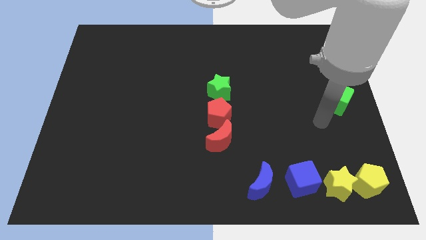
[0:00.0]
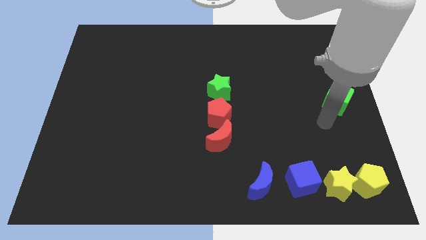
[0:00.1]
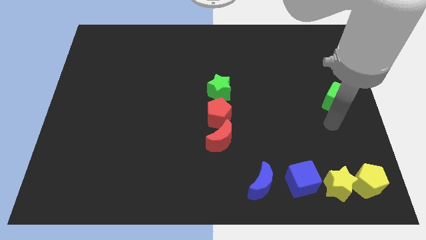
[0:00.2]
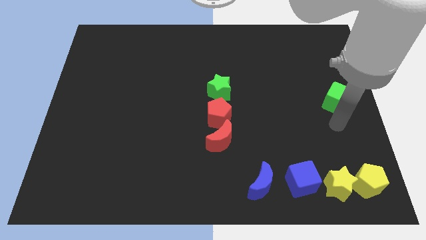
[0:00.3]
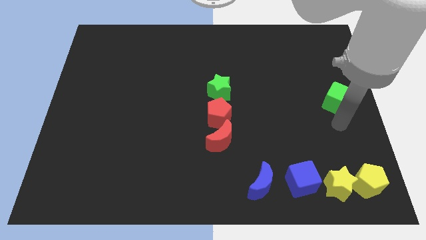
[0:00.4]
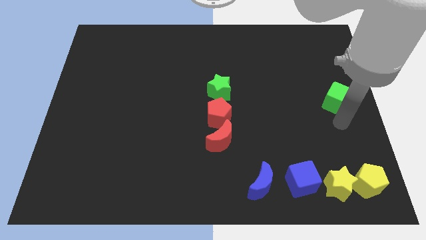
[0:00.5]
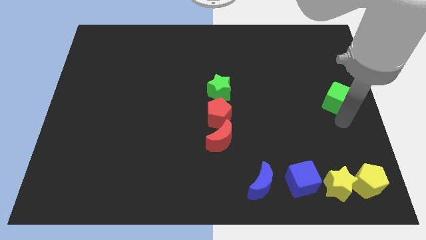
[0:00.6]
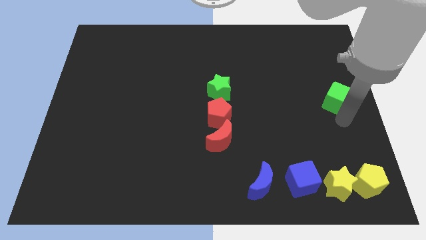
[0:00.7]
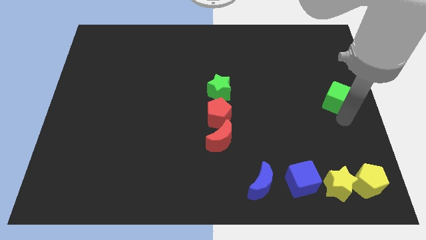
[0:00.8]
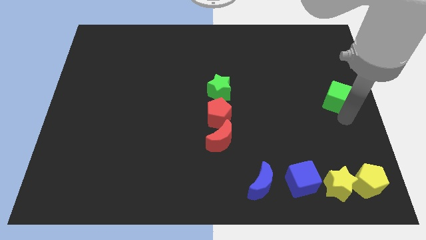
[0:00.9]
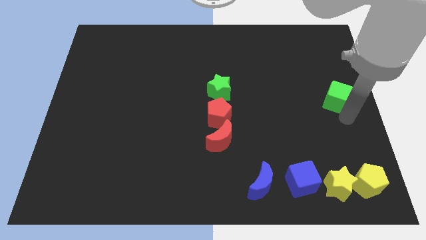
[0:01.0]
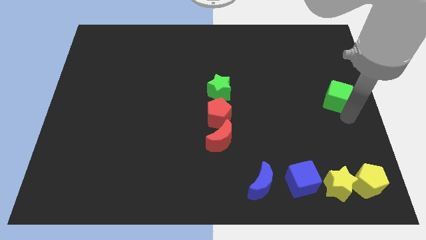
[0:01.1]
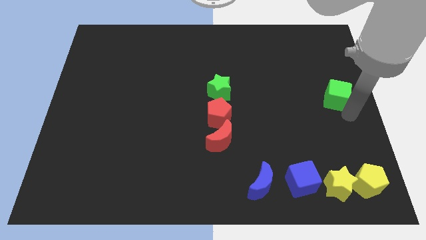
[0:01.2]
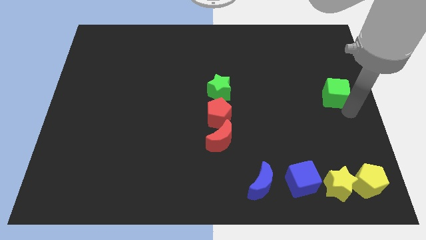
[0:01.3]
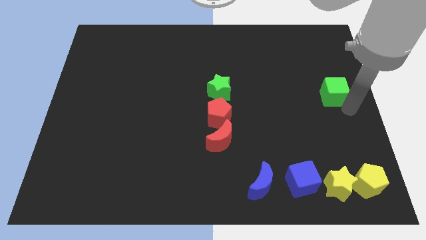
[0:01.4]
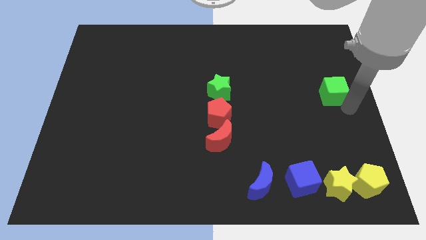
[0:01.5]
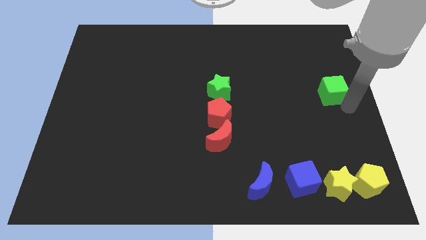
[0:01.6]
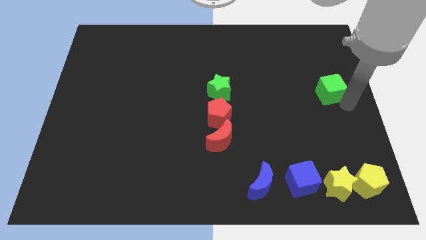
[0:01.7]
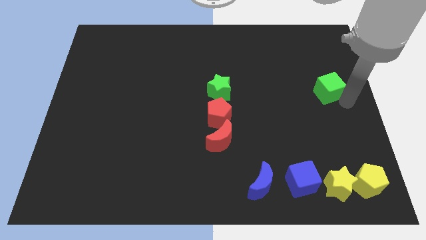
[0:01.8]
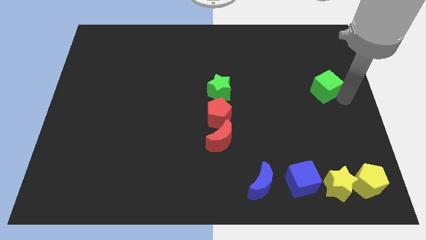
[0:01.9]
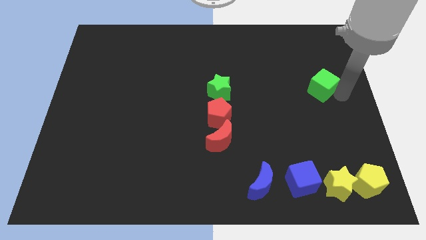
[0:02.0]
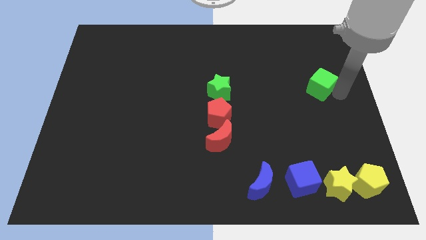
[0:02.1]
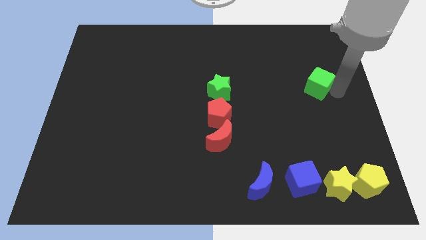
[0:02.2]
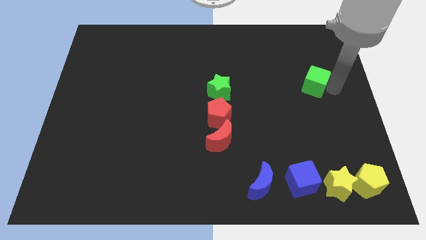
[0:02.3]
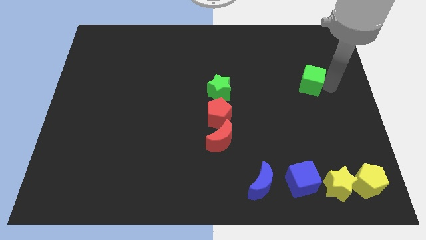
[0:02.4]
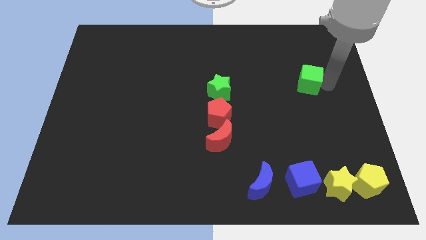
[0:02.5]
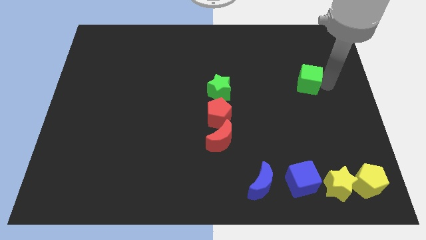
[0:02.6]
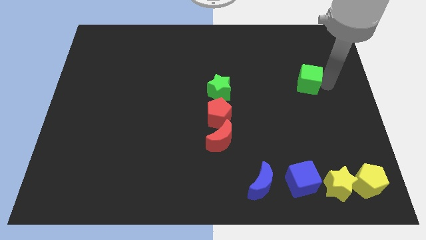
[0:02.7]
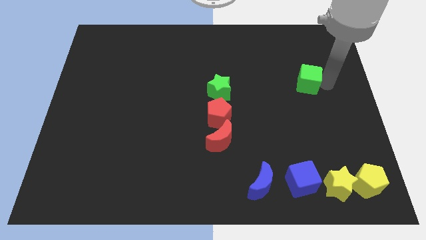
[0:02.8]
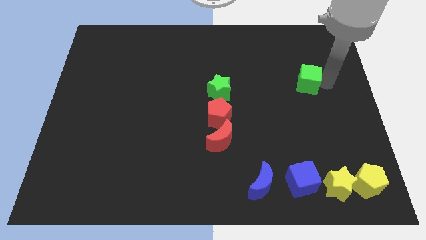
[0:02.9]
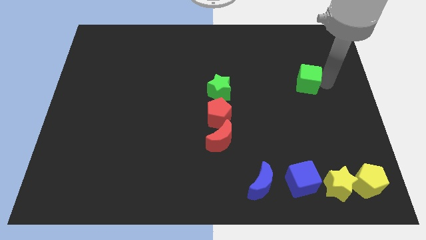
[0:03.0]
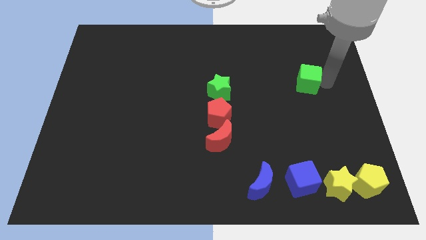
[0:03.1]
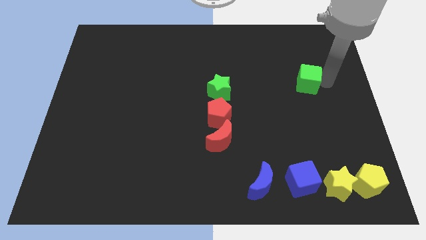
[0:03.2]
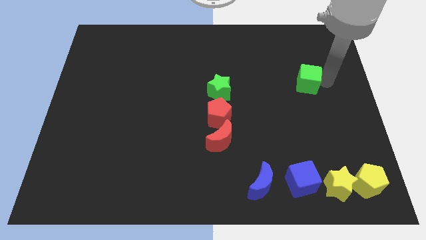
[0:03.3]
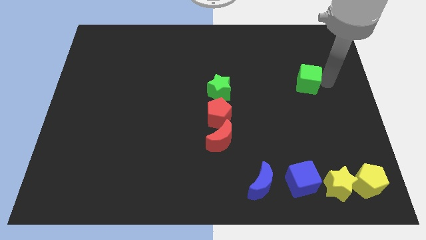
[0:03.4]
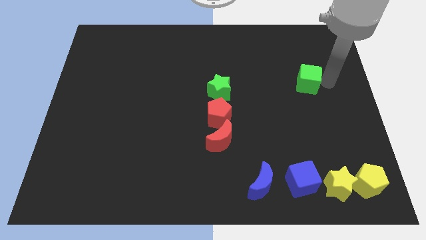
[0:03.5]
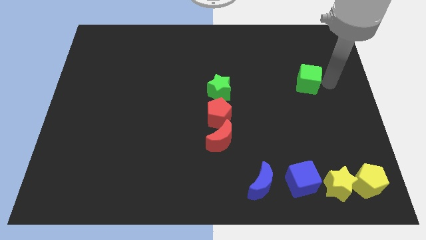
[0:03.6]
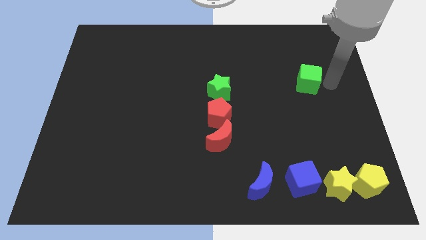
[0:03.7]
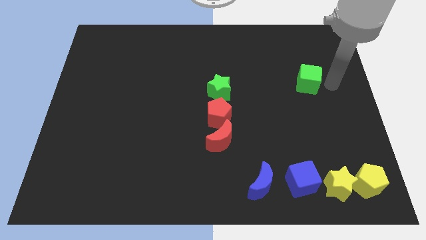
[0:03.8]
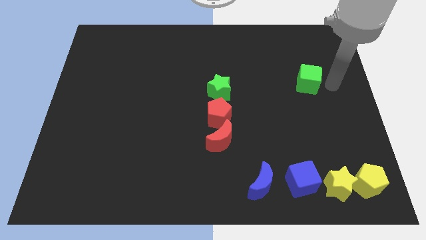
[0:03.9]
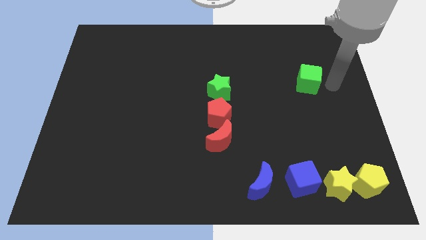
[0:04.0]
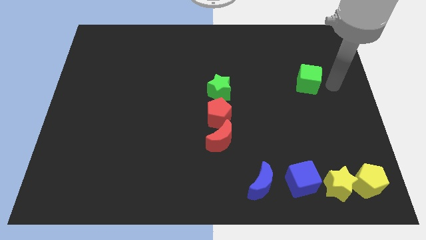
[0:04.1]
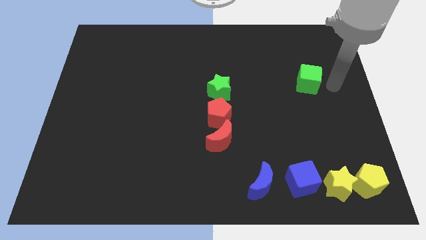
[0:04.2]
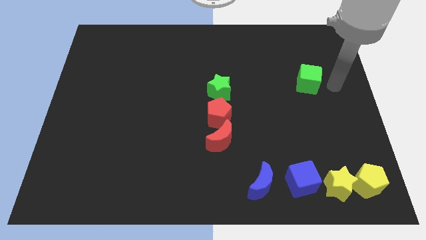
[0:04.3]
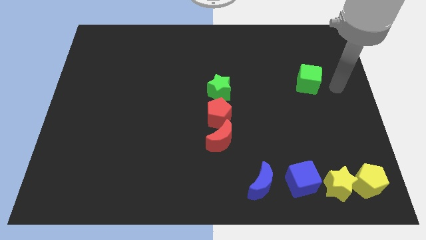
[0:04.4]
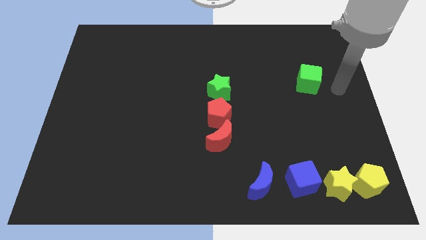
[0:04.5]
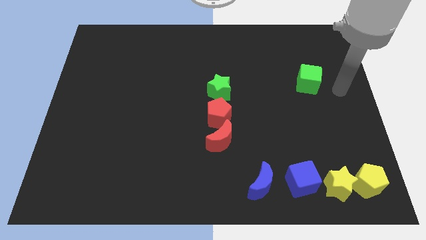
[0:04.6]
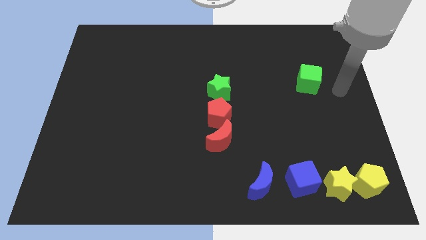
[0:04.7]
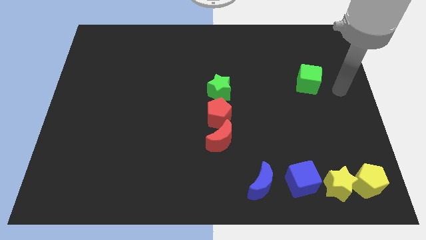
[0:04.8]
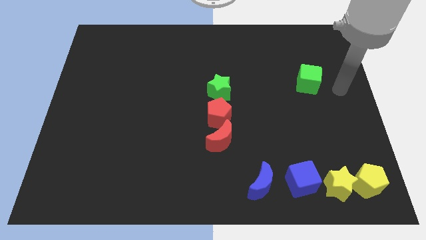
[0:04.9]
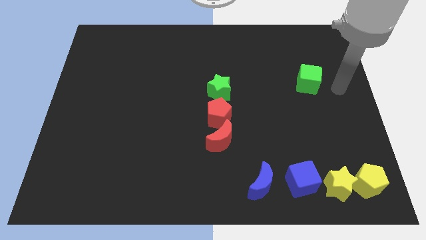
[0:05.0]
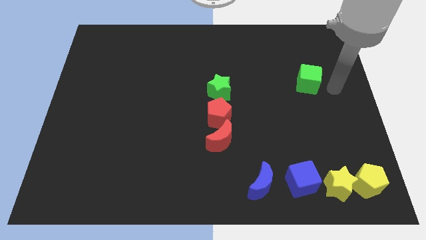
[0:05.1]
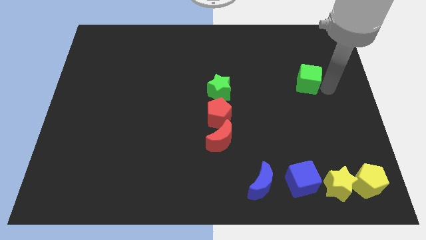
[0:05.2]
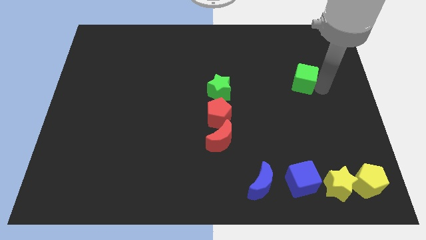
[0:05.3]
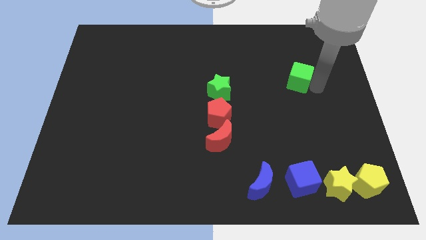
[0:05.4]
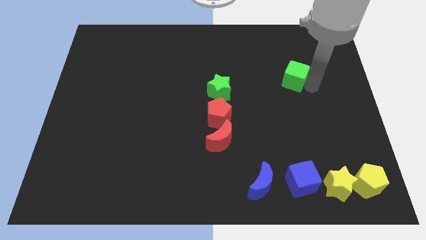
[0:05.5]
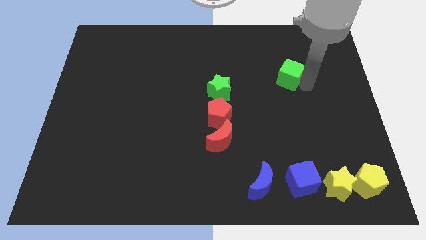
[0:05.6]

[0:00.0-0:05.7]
move the green cube vertical to the blue cube

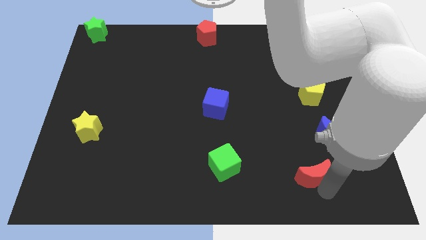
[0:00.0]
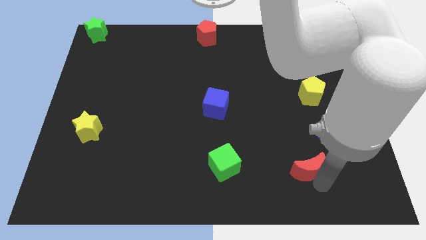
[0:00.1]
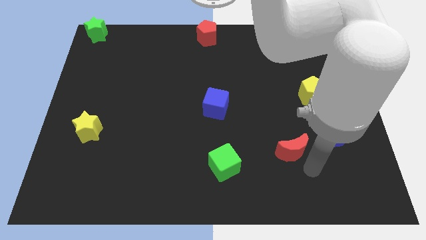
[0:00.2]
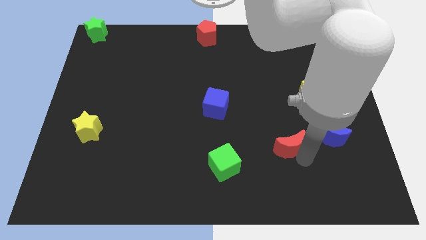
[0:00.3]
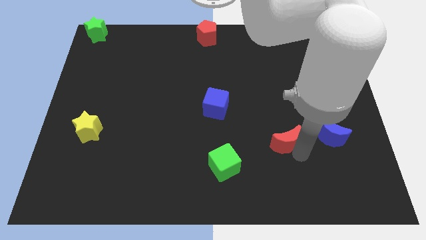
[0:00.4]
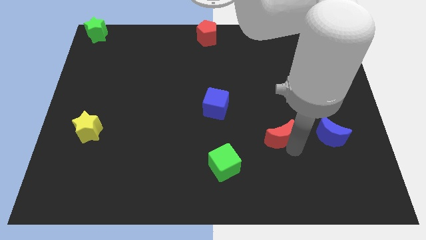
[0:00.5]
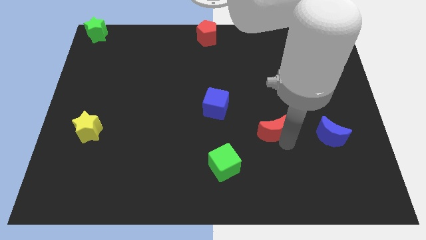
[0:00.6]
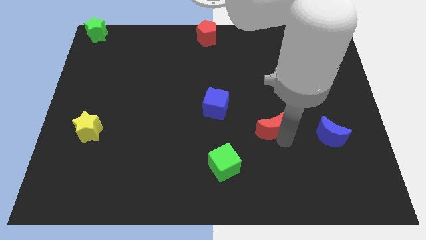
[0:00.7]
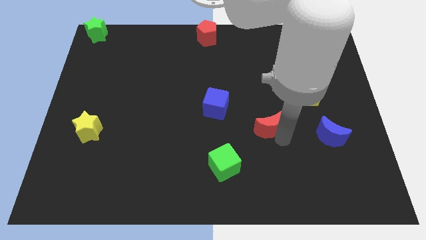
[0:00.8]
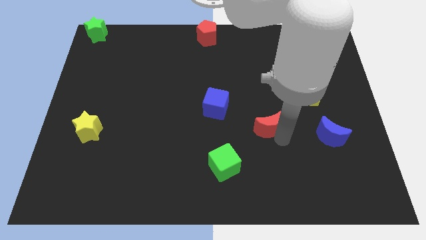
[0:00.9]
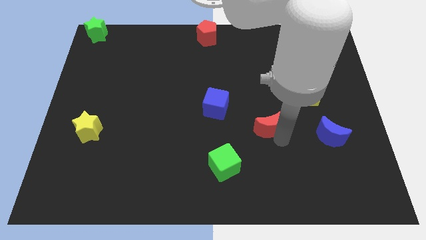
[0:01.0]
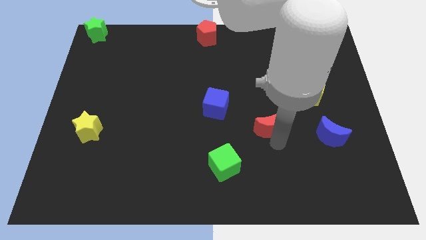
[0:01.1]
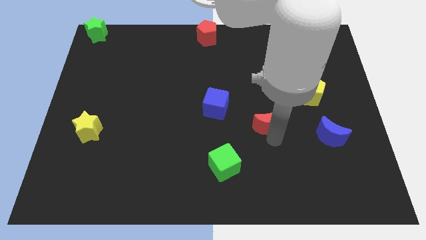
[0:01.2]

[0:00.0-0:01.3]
place red moon diagonally in between blue blocks

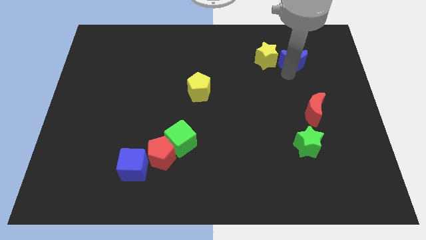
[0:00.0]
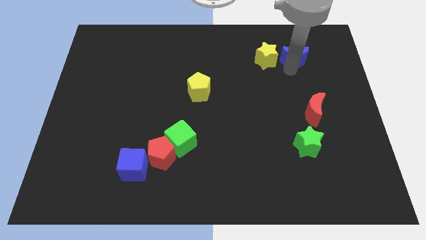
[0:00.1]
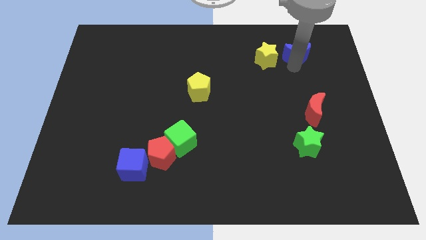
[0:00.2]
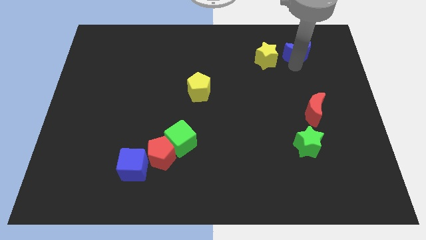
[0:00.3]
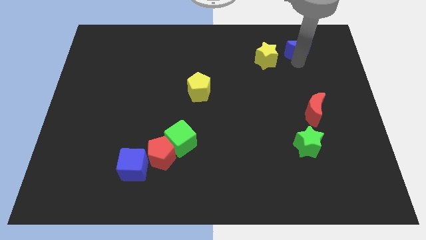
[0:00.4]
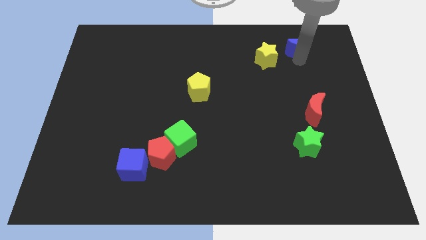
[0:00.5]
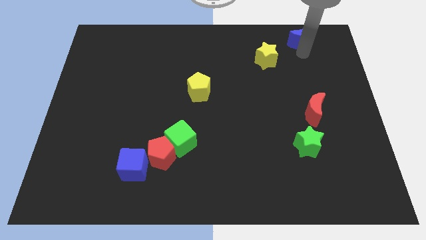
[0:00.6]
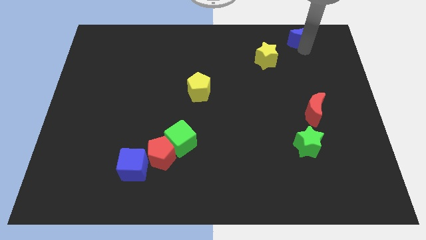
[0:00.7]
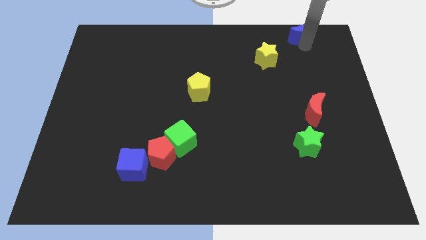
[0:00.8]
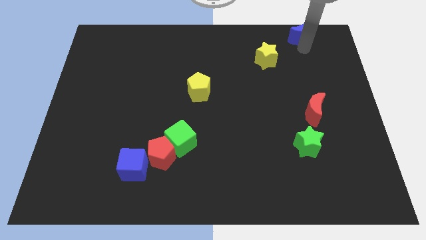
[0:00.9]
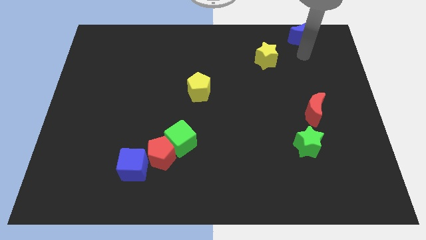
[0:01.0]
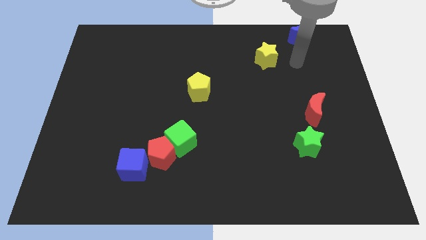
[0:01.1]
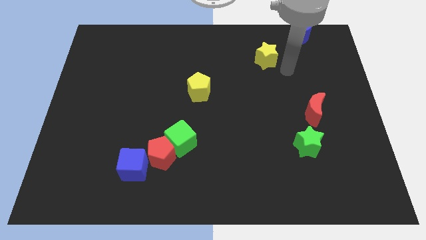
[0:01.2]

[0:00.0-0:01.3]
move the blue moon to the top of the board

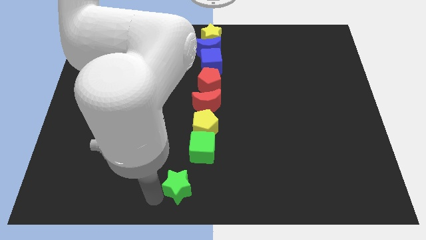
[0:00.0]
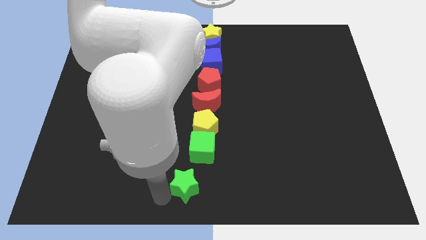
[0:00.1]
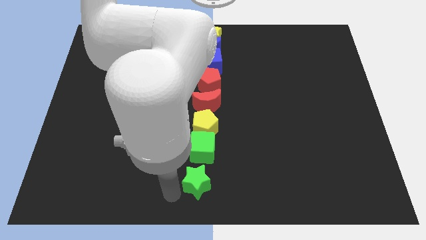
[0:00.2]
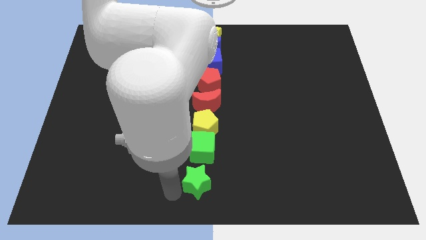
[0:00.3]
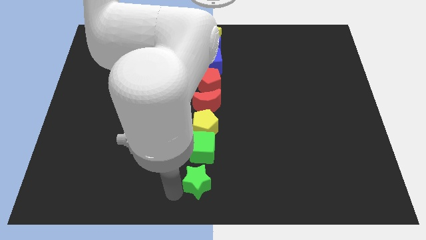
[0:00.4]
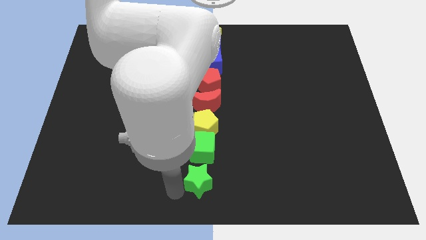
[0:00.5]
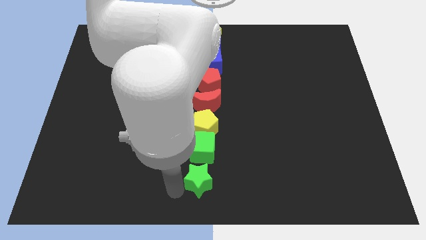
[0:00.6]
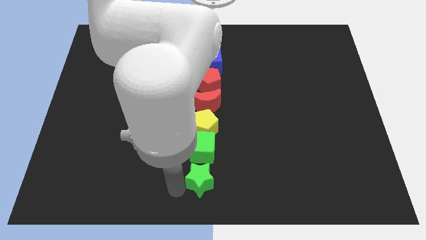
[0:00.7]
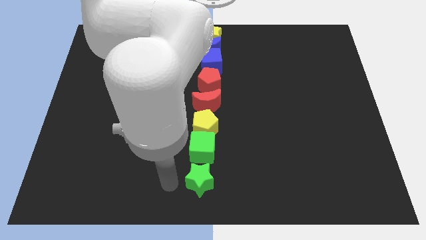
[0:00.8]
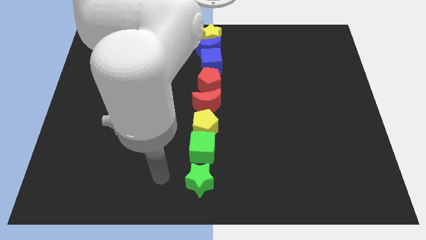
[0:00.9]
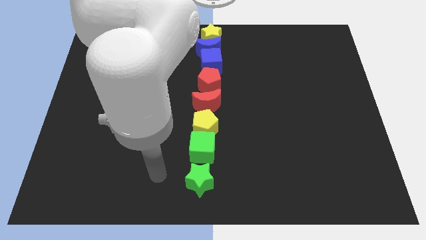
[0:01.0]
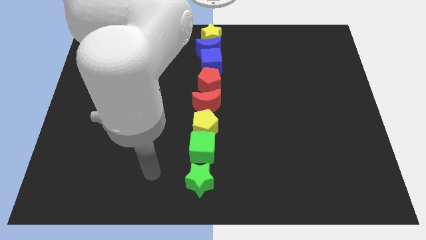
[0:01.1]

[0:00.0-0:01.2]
line the blocks up vertically
